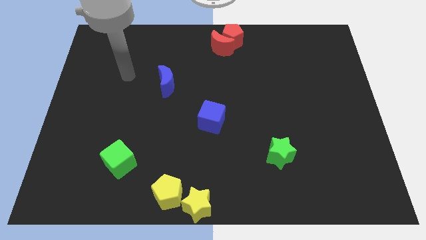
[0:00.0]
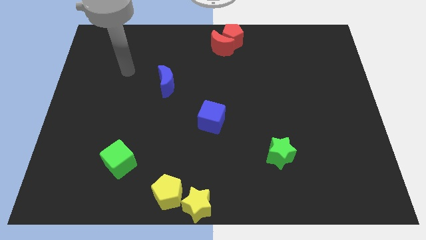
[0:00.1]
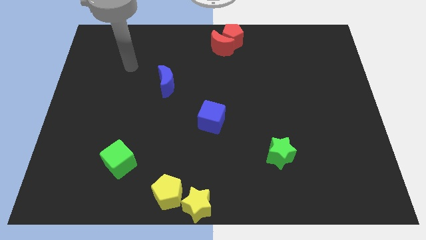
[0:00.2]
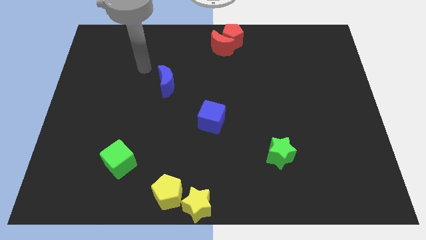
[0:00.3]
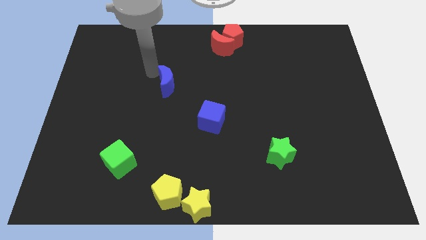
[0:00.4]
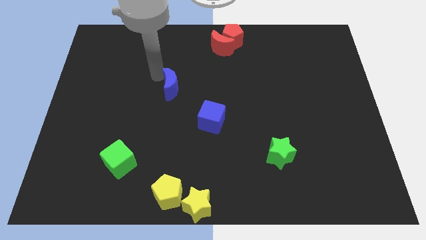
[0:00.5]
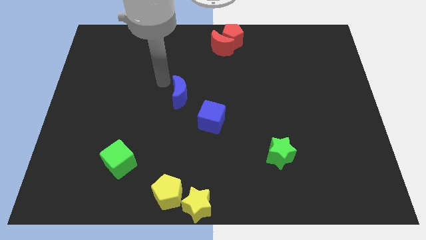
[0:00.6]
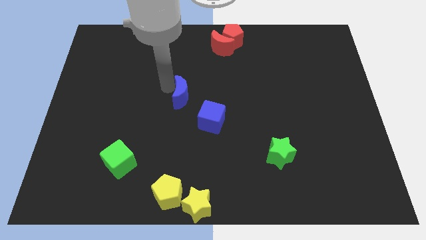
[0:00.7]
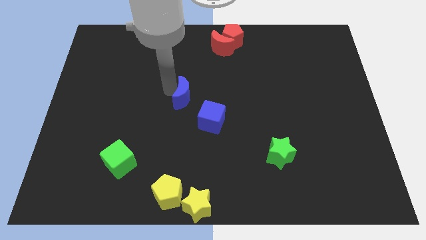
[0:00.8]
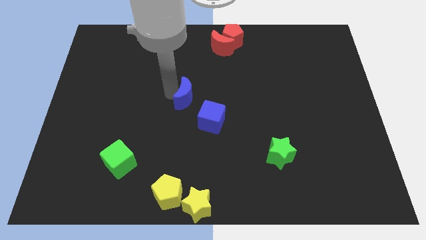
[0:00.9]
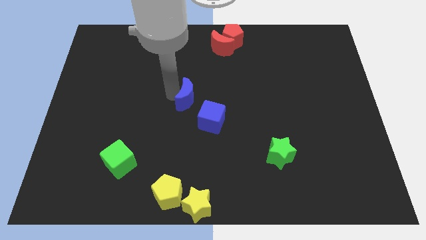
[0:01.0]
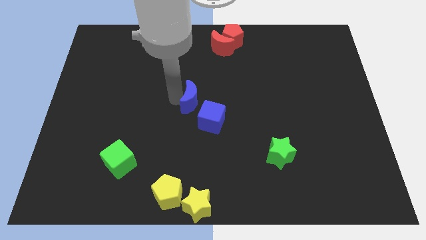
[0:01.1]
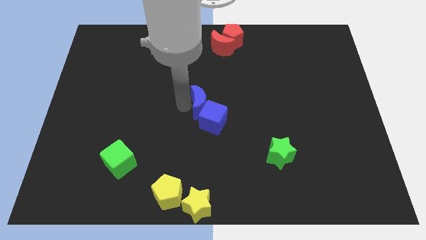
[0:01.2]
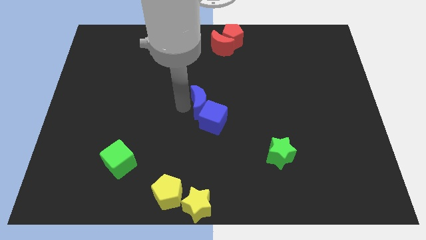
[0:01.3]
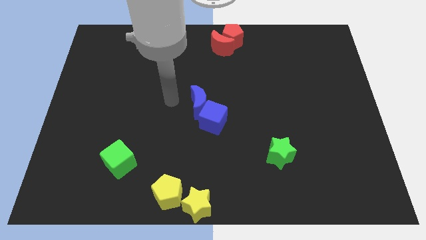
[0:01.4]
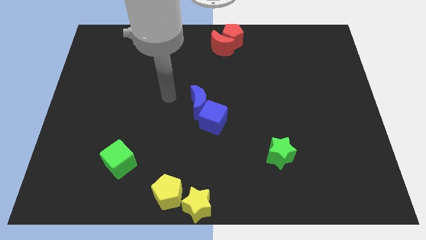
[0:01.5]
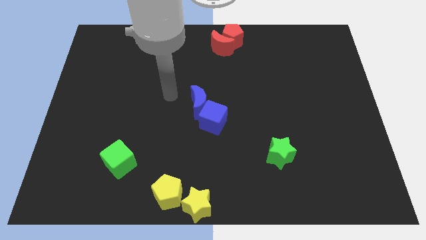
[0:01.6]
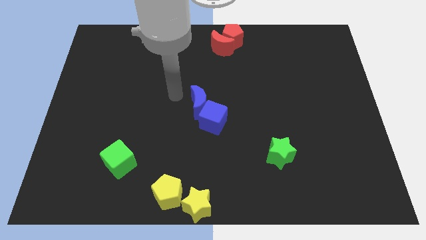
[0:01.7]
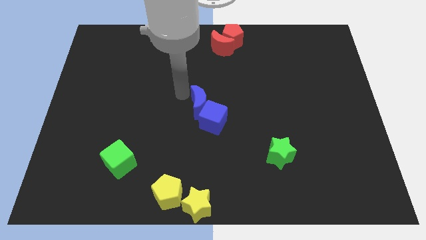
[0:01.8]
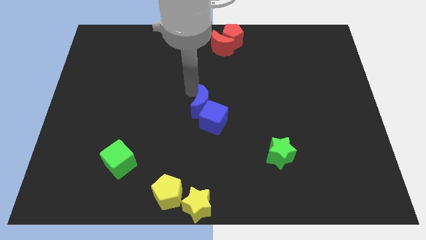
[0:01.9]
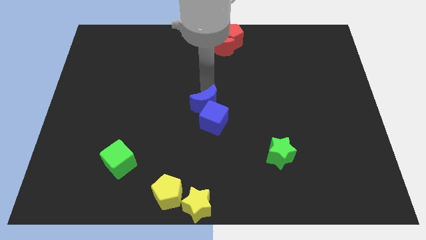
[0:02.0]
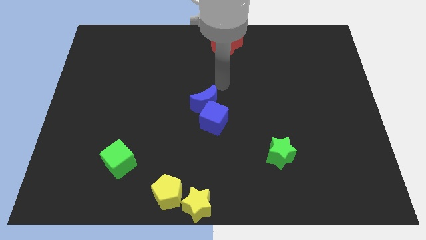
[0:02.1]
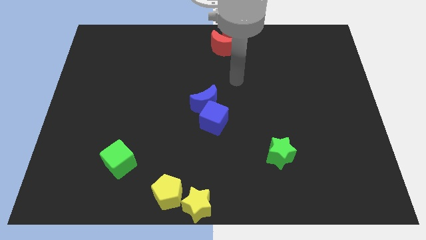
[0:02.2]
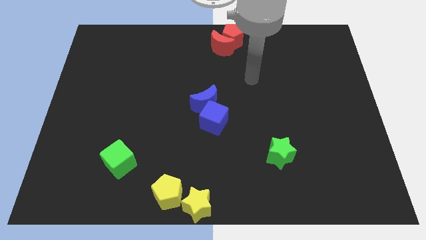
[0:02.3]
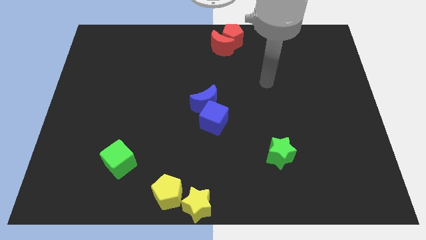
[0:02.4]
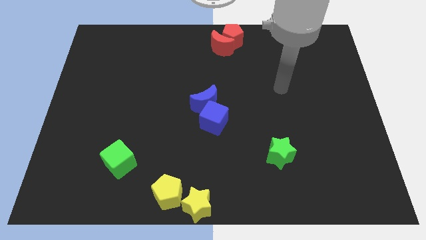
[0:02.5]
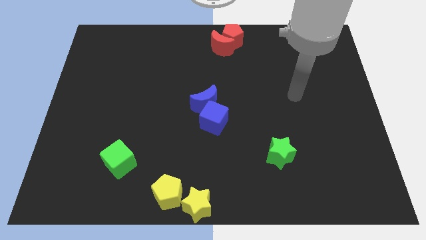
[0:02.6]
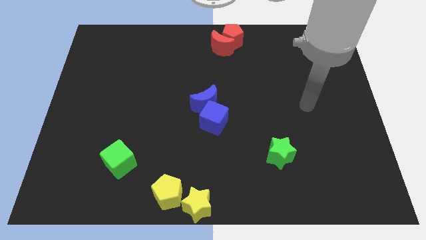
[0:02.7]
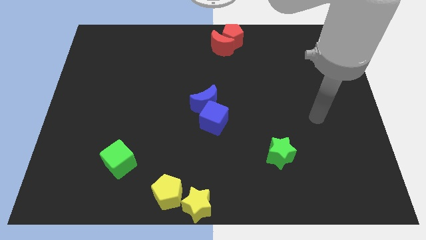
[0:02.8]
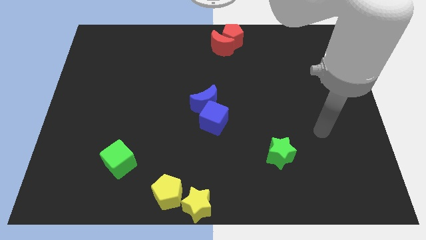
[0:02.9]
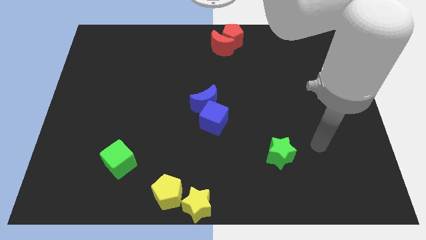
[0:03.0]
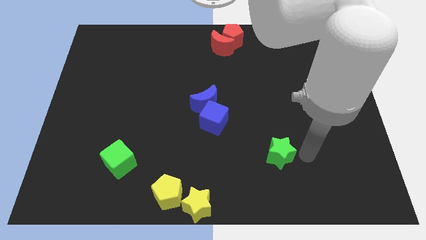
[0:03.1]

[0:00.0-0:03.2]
push blue moon in to blue cube

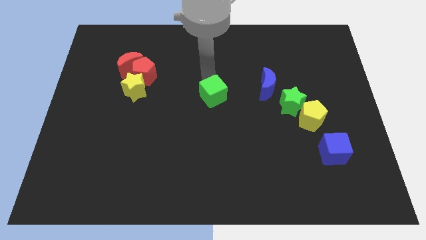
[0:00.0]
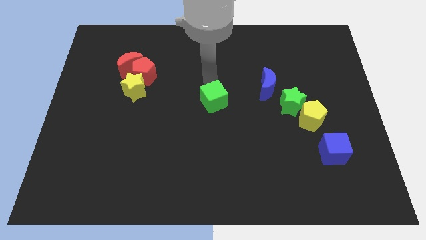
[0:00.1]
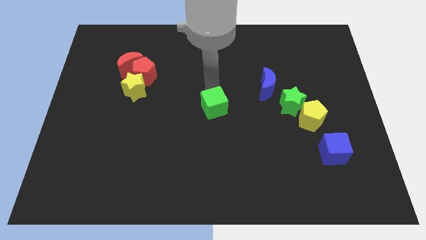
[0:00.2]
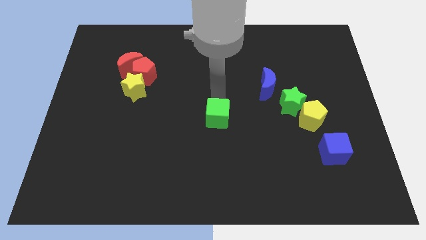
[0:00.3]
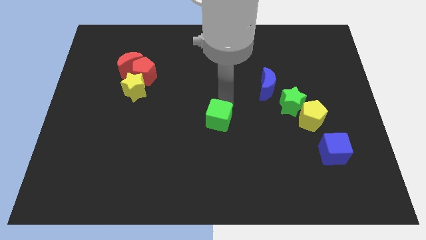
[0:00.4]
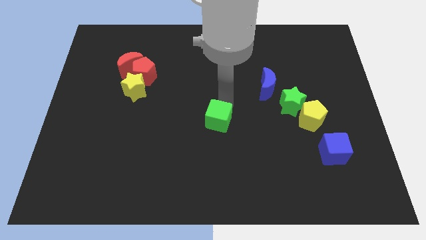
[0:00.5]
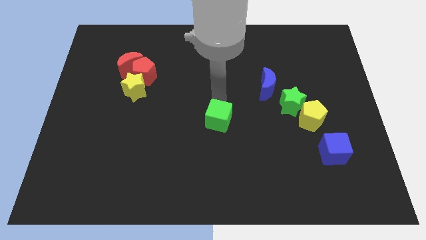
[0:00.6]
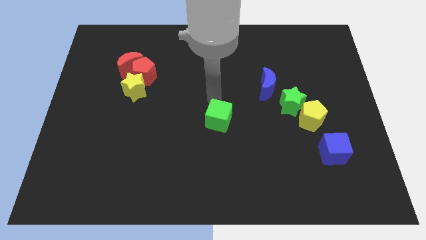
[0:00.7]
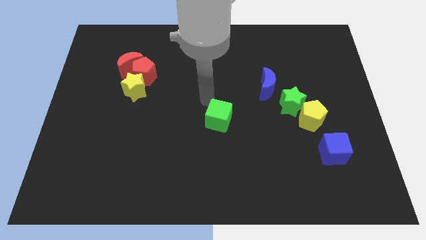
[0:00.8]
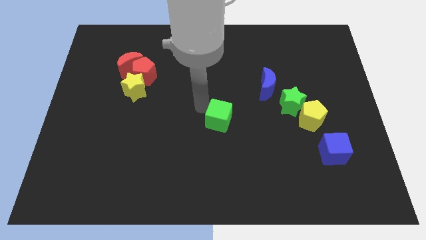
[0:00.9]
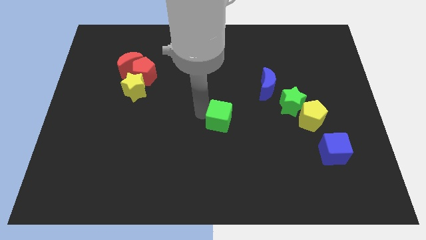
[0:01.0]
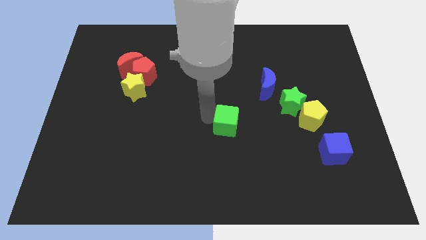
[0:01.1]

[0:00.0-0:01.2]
move the green cube to the center of the board

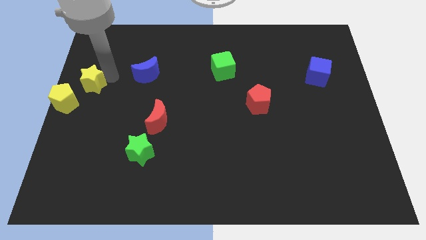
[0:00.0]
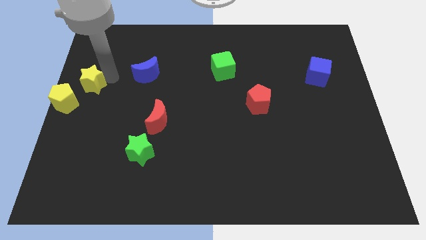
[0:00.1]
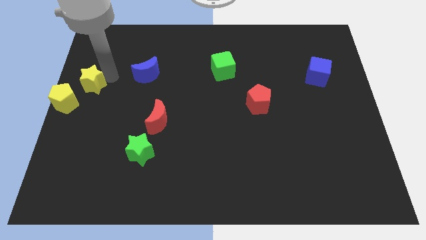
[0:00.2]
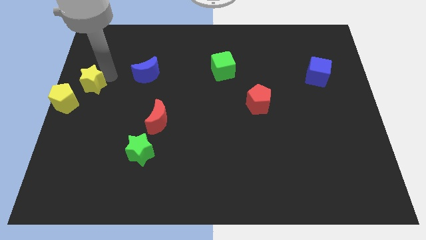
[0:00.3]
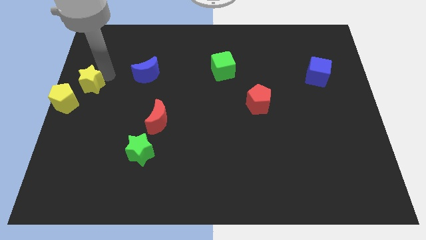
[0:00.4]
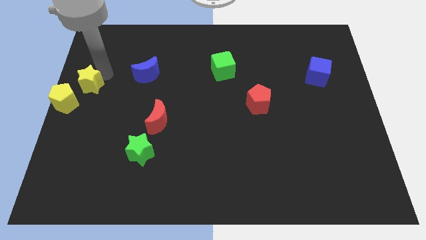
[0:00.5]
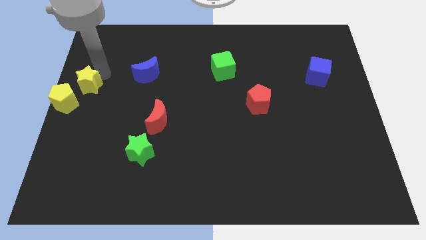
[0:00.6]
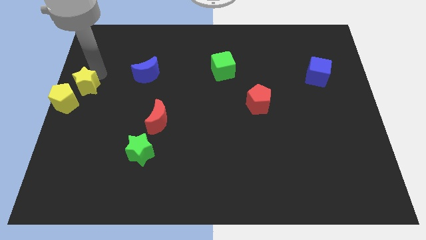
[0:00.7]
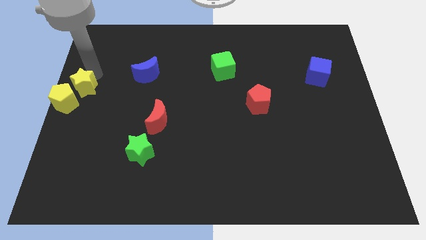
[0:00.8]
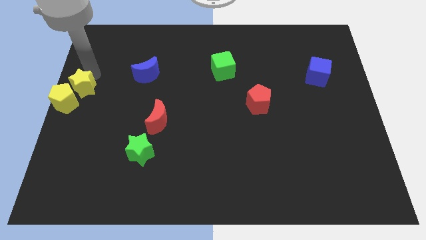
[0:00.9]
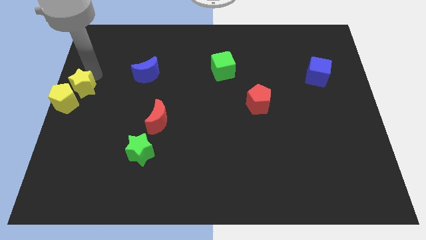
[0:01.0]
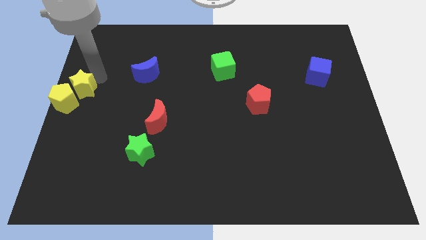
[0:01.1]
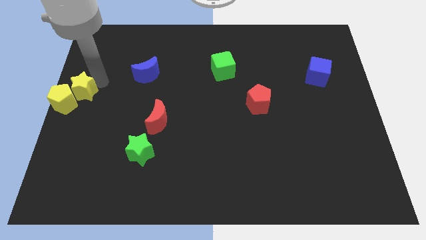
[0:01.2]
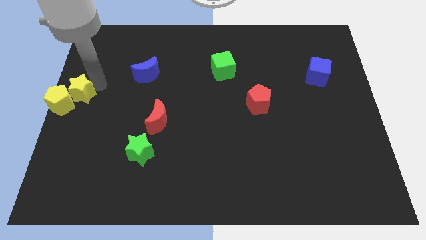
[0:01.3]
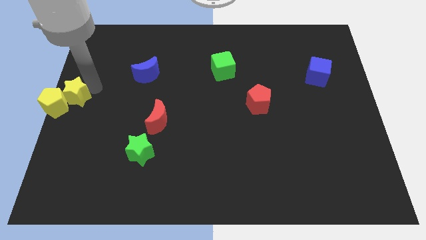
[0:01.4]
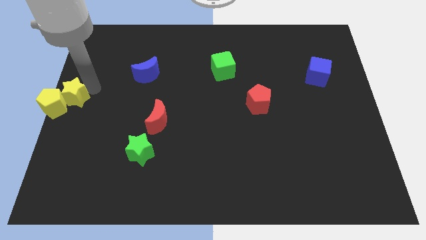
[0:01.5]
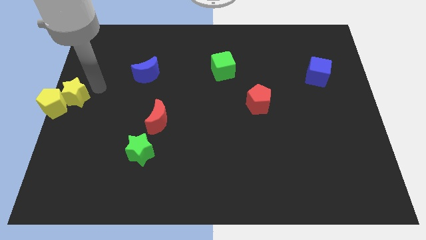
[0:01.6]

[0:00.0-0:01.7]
push the yellow star into the yellow pentagon

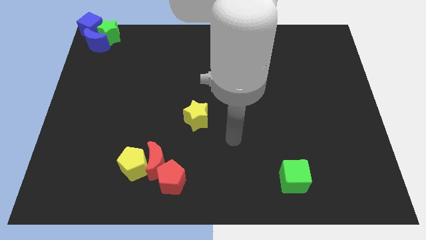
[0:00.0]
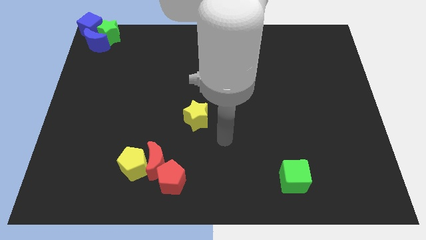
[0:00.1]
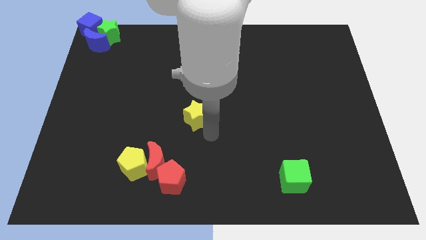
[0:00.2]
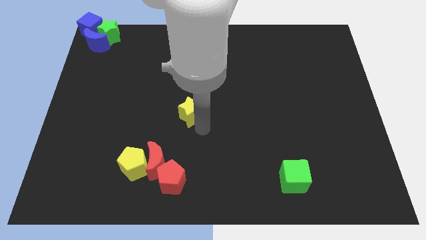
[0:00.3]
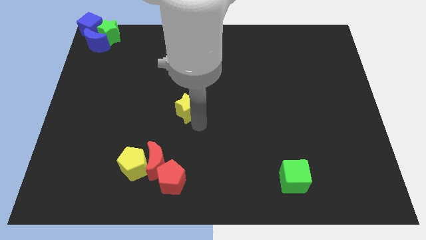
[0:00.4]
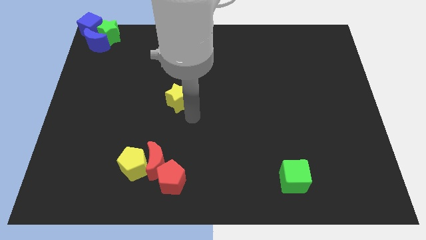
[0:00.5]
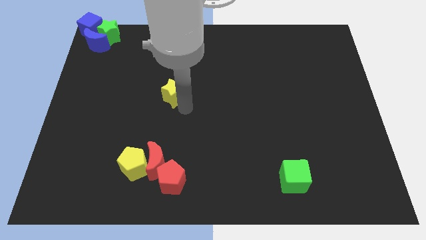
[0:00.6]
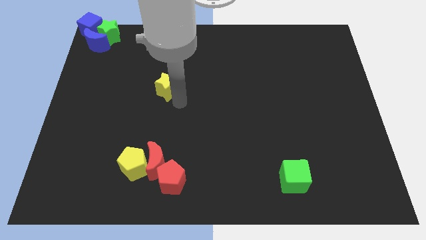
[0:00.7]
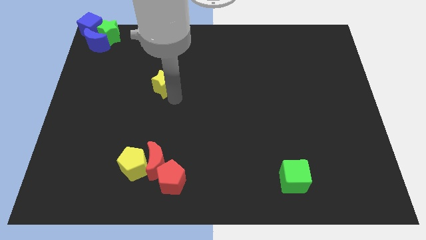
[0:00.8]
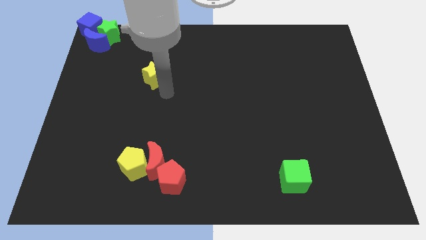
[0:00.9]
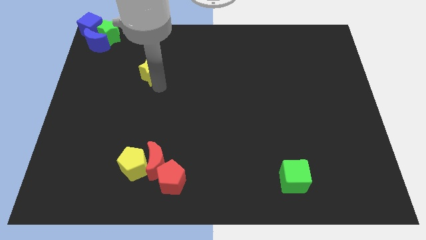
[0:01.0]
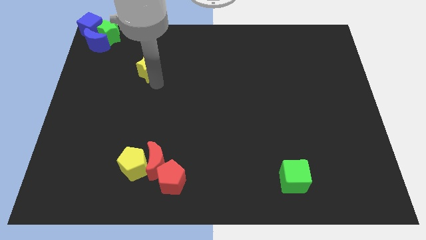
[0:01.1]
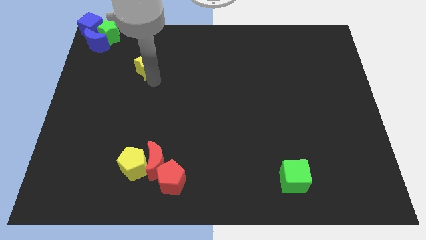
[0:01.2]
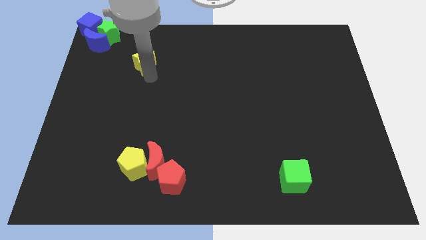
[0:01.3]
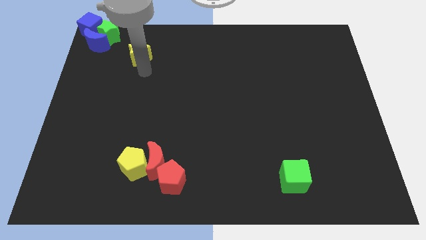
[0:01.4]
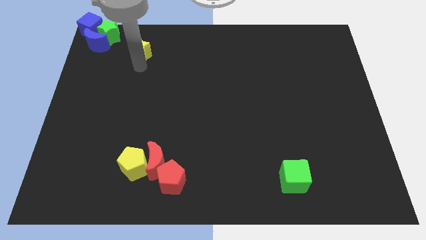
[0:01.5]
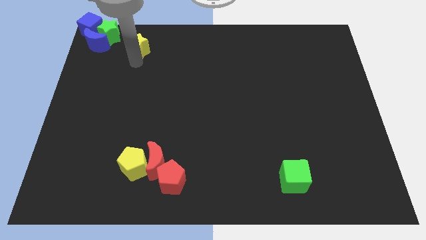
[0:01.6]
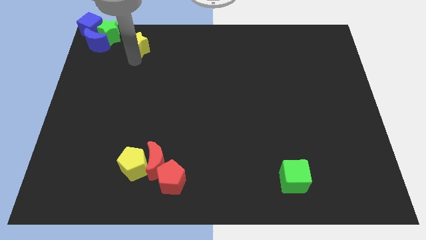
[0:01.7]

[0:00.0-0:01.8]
push the yellow star closer to the green star

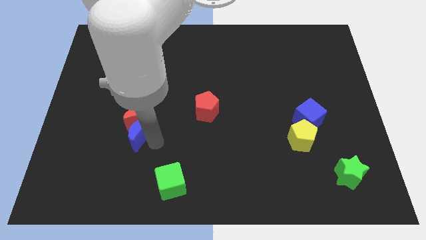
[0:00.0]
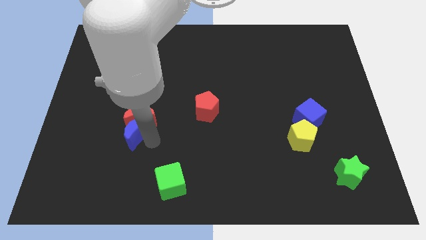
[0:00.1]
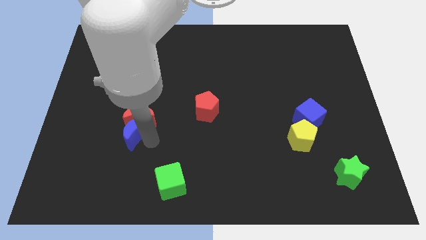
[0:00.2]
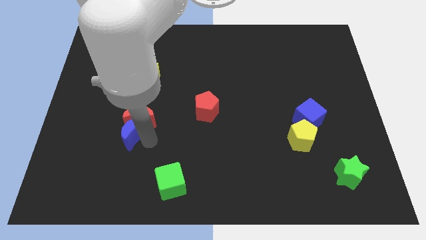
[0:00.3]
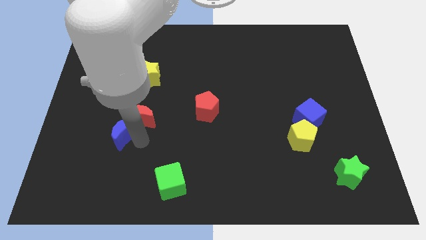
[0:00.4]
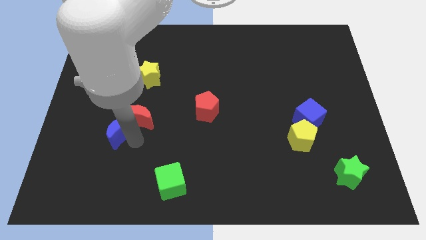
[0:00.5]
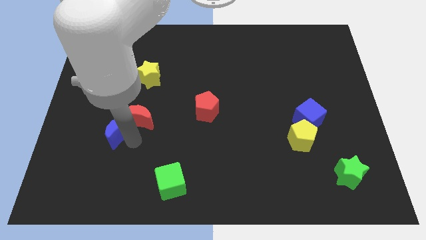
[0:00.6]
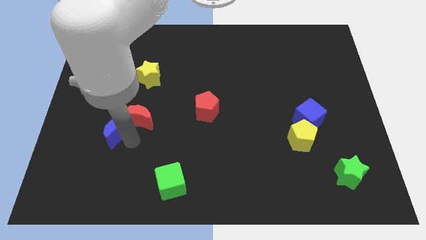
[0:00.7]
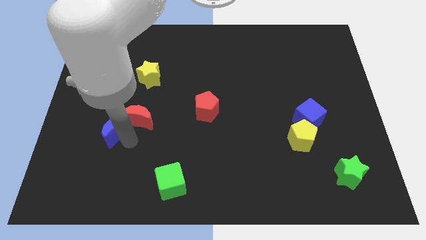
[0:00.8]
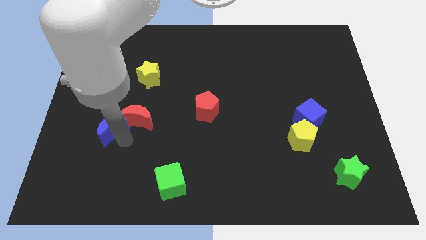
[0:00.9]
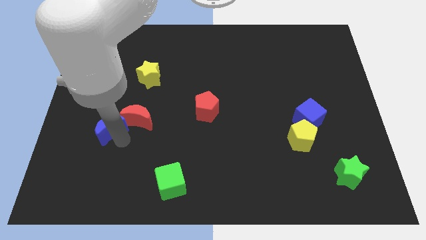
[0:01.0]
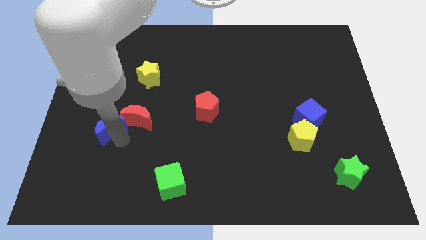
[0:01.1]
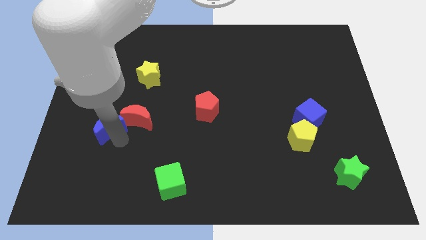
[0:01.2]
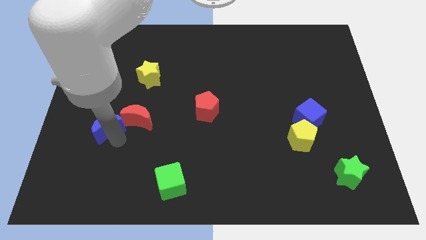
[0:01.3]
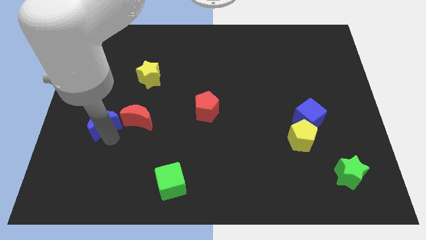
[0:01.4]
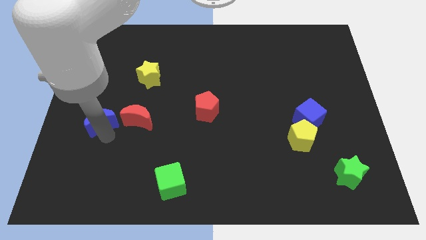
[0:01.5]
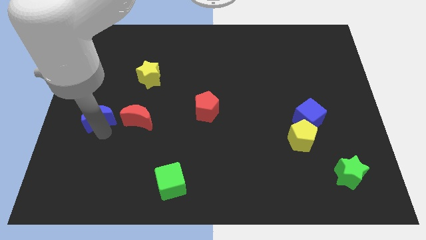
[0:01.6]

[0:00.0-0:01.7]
push the blue crescent to the left of the red crescent
